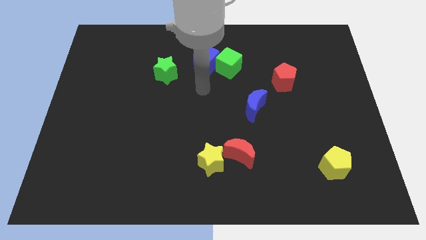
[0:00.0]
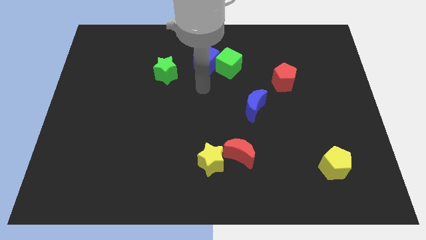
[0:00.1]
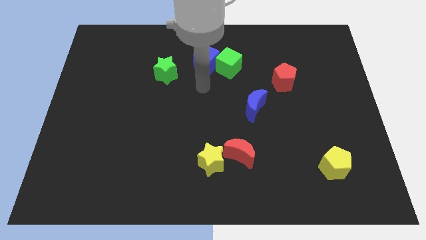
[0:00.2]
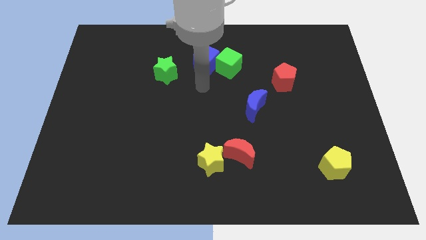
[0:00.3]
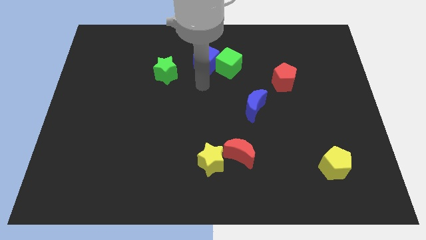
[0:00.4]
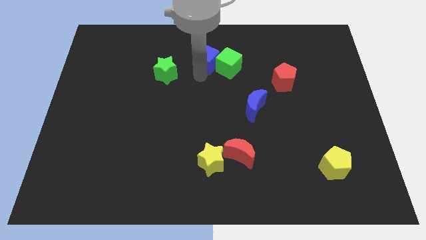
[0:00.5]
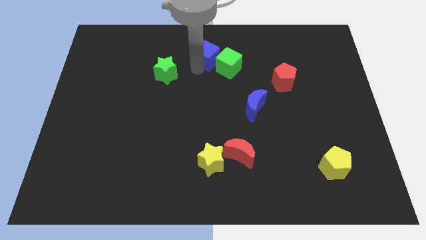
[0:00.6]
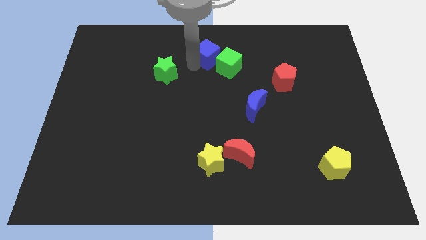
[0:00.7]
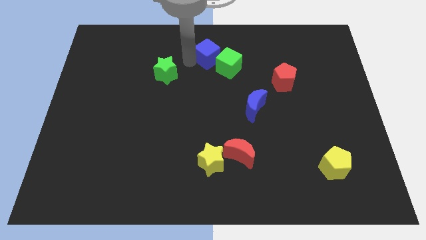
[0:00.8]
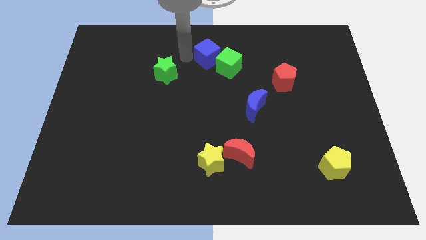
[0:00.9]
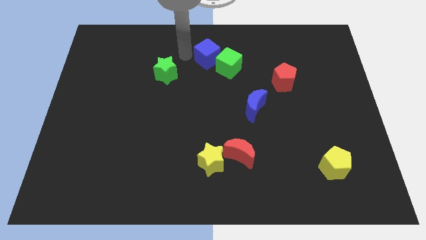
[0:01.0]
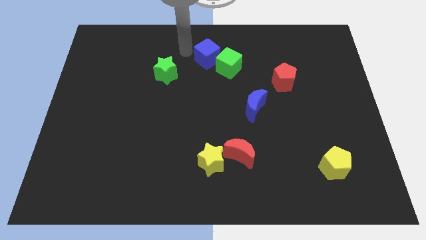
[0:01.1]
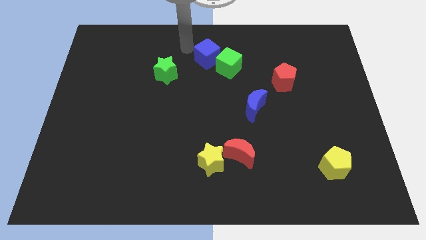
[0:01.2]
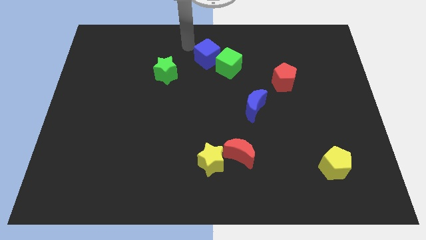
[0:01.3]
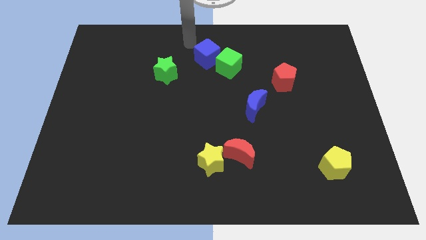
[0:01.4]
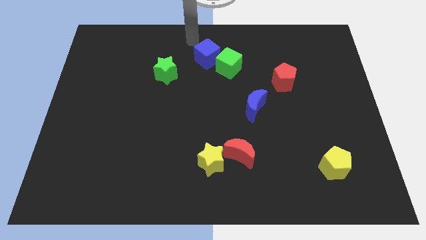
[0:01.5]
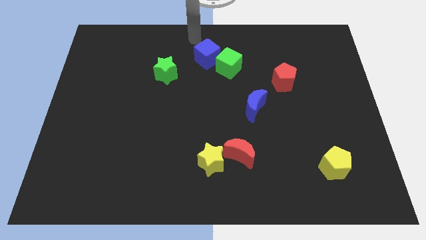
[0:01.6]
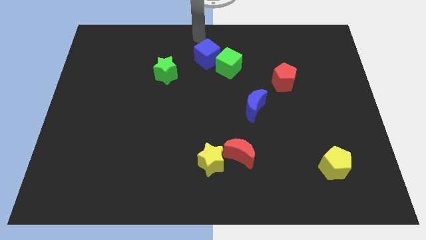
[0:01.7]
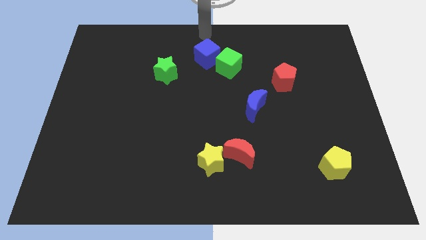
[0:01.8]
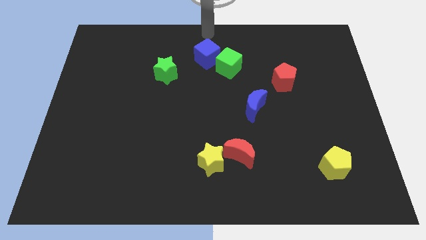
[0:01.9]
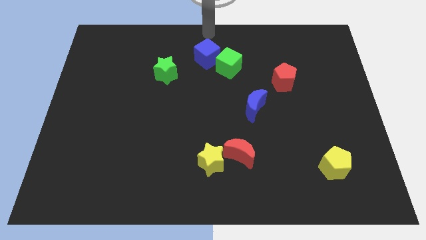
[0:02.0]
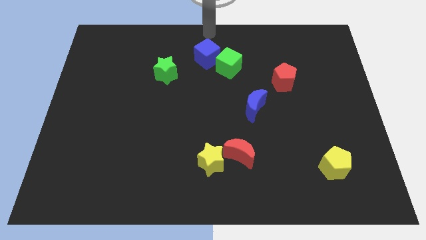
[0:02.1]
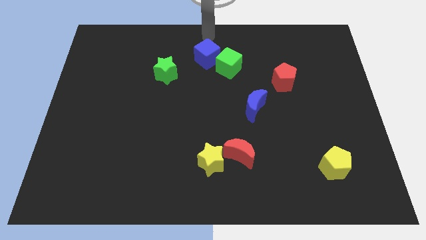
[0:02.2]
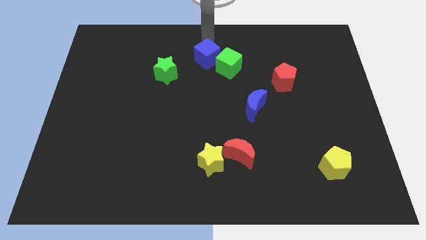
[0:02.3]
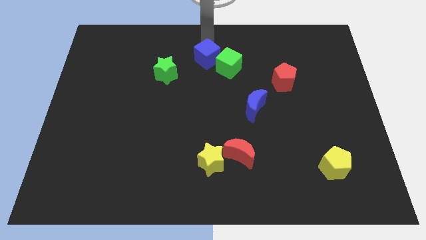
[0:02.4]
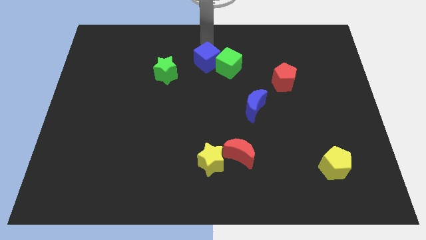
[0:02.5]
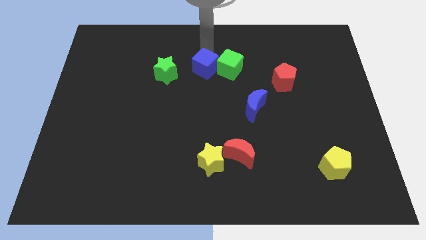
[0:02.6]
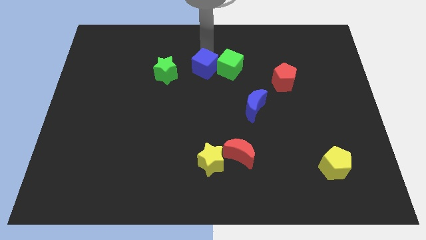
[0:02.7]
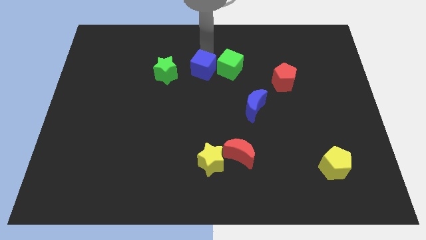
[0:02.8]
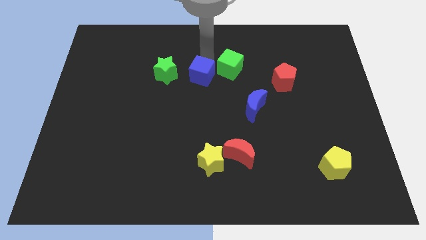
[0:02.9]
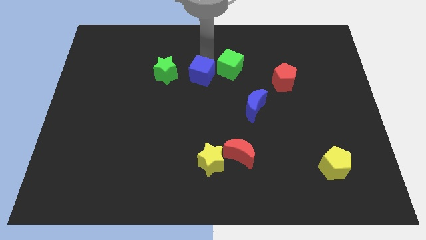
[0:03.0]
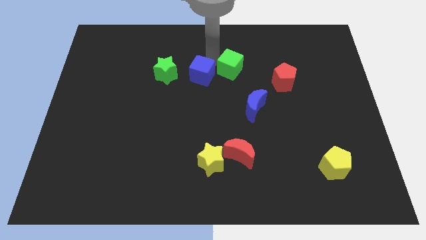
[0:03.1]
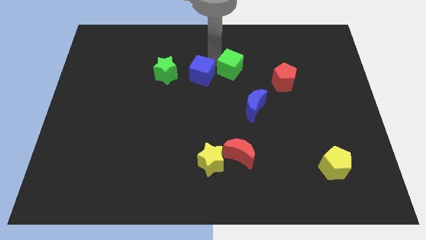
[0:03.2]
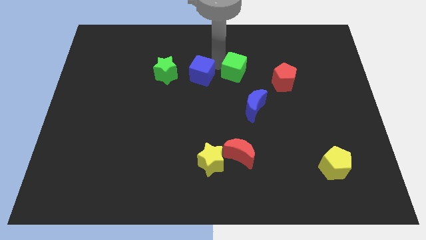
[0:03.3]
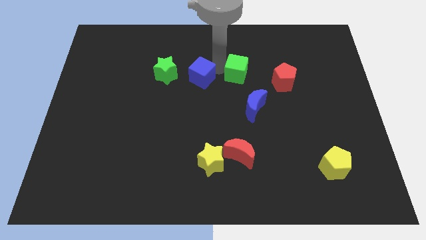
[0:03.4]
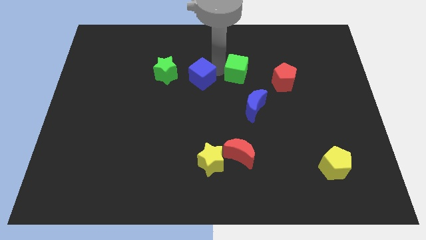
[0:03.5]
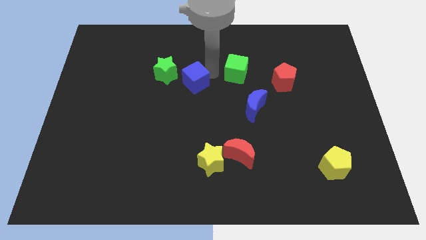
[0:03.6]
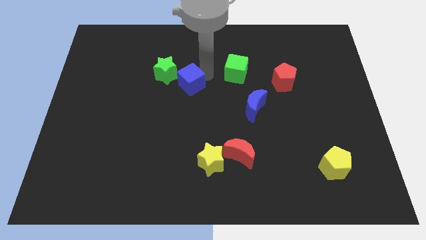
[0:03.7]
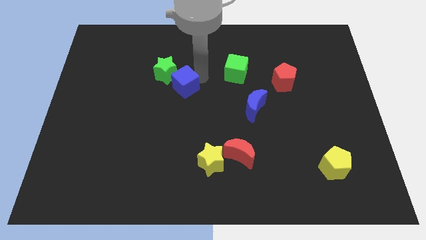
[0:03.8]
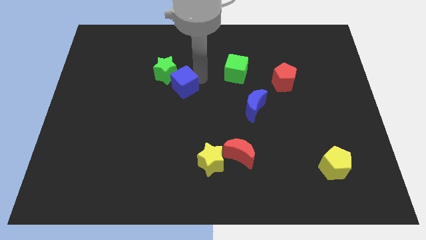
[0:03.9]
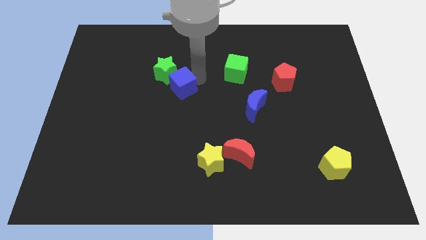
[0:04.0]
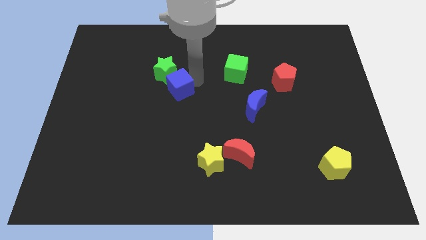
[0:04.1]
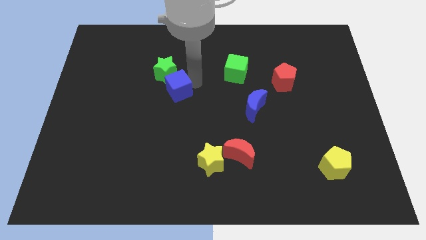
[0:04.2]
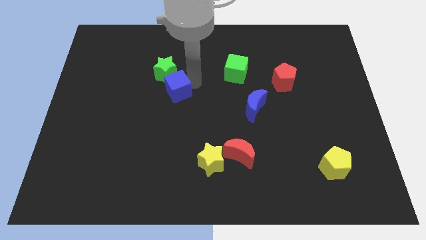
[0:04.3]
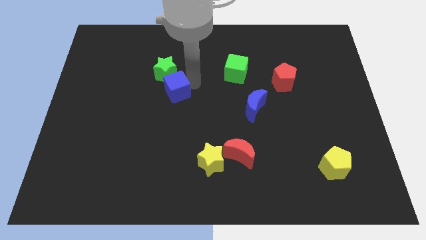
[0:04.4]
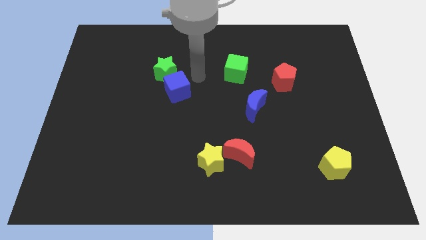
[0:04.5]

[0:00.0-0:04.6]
place blue cube to the bottom right of green star

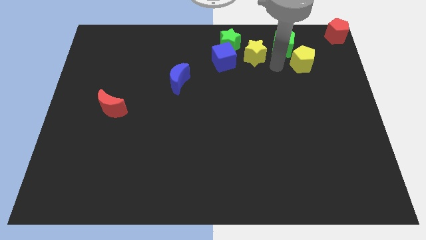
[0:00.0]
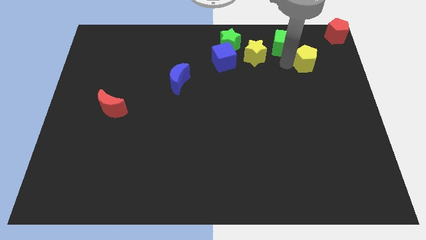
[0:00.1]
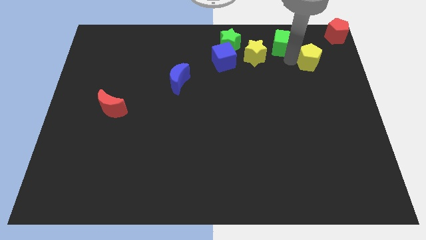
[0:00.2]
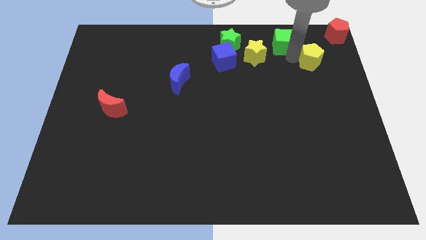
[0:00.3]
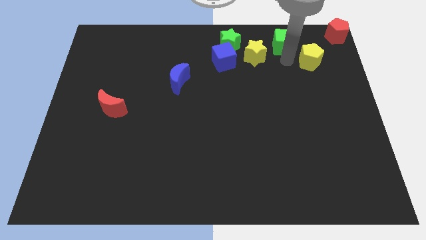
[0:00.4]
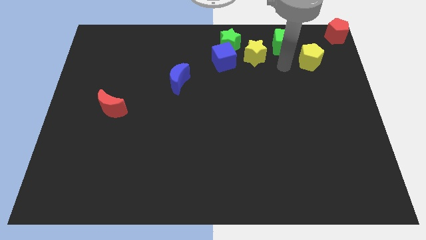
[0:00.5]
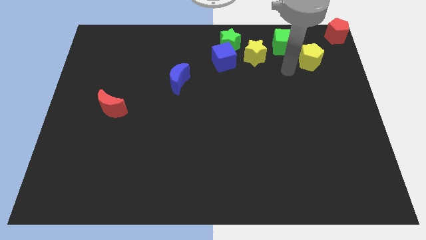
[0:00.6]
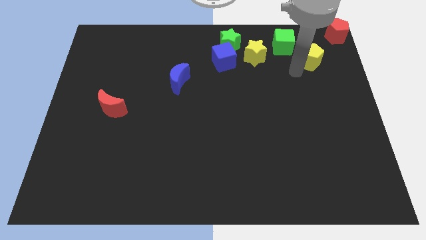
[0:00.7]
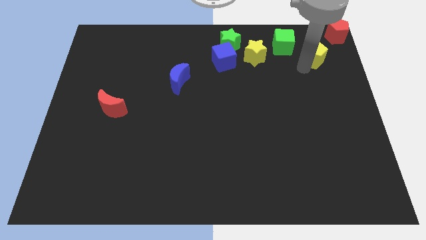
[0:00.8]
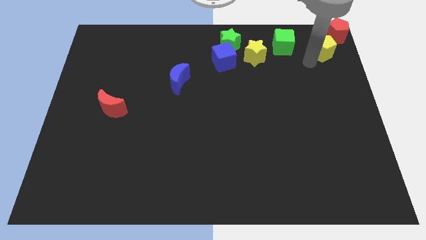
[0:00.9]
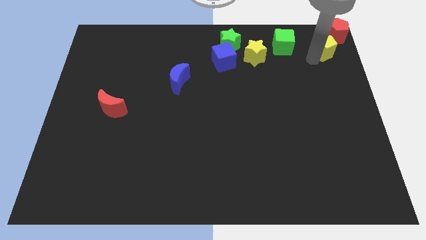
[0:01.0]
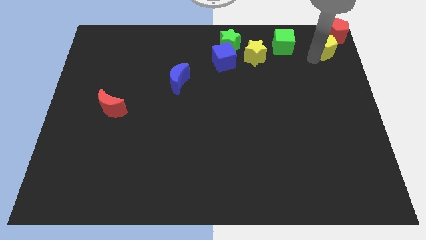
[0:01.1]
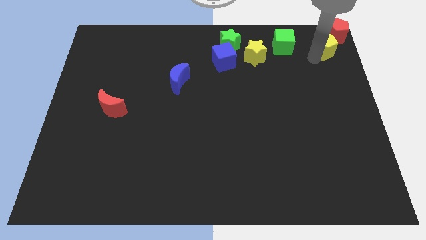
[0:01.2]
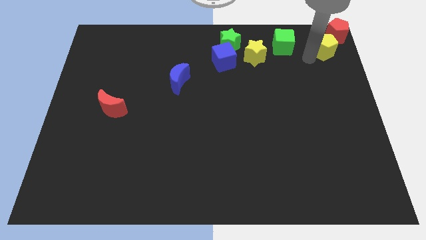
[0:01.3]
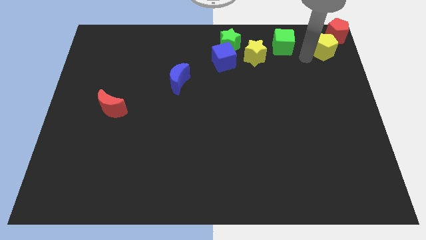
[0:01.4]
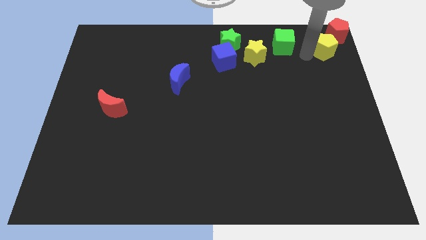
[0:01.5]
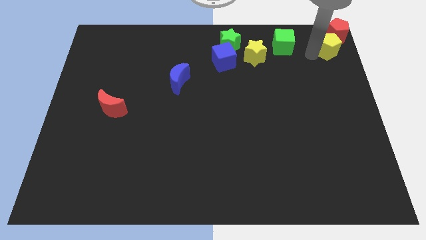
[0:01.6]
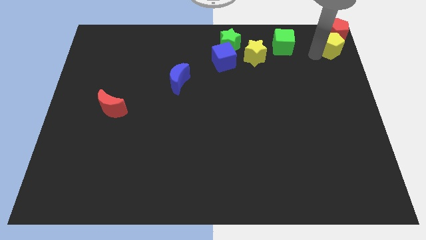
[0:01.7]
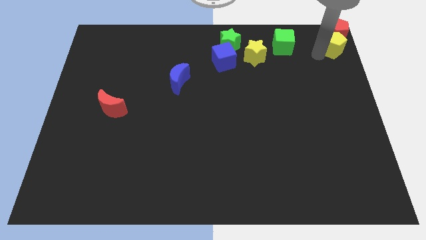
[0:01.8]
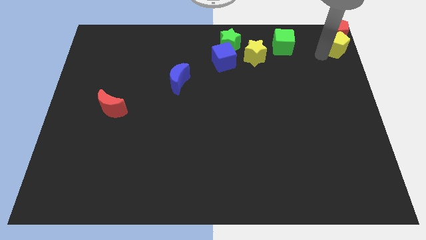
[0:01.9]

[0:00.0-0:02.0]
move yellow pentagon to the bottom of red pentagon

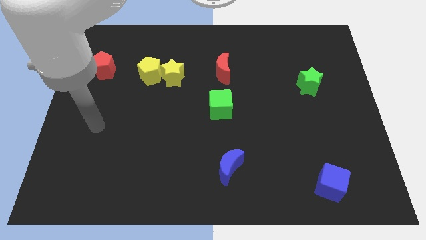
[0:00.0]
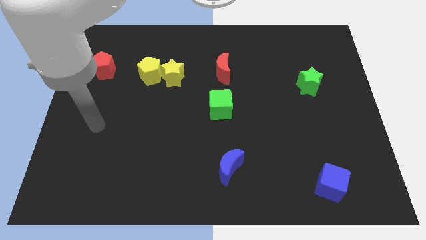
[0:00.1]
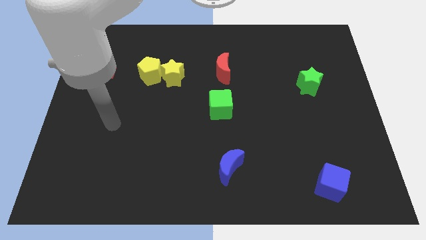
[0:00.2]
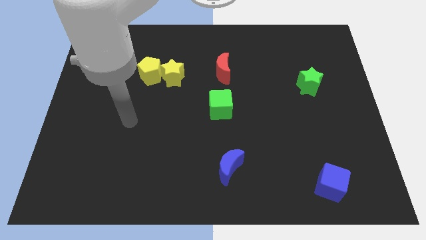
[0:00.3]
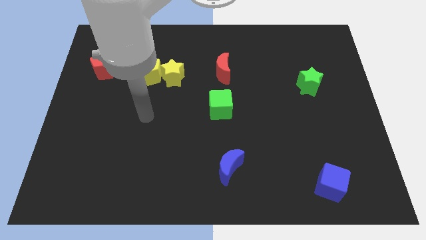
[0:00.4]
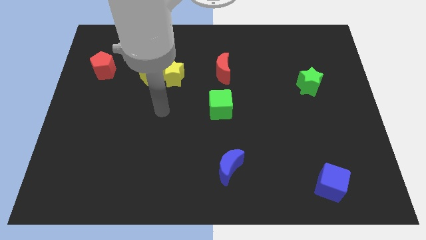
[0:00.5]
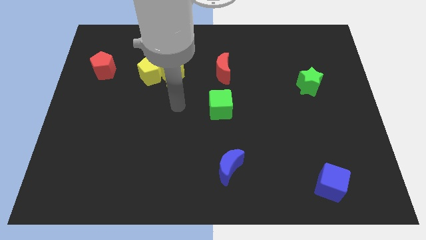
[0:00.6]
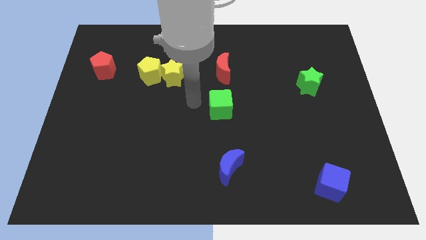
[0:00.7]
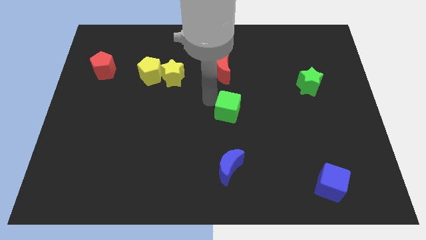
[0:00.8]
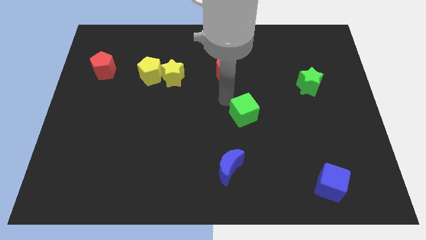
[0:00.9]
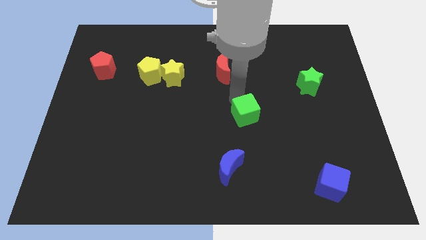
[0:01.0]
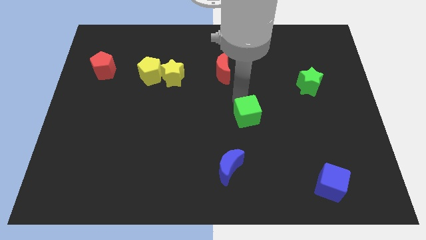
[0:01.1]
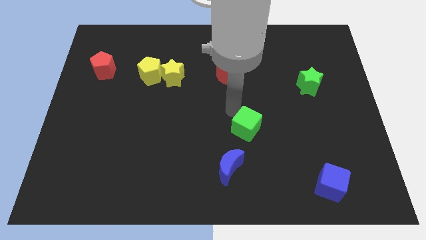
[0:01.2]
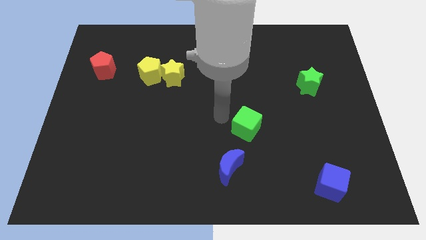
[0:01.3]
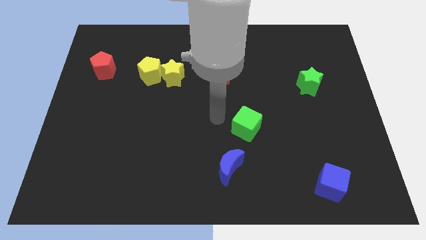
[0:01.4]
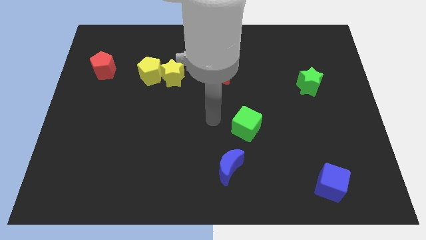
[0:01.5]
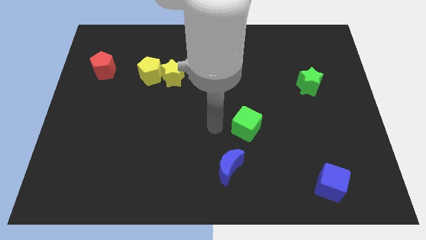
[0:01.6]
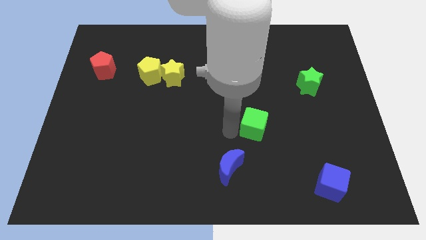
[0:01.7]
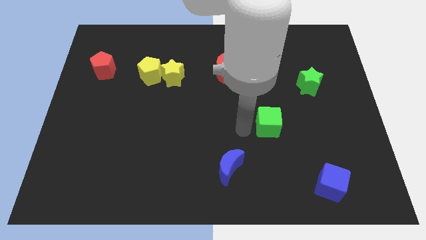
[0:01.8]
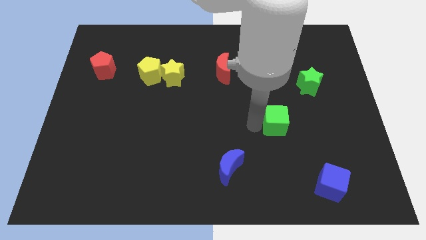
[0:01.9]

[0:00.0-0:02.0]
move green cube towards the green star

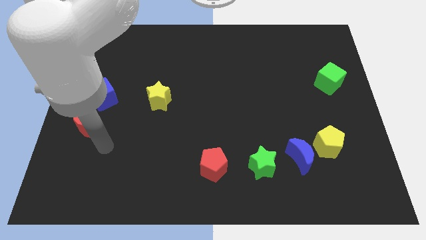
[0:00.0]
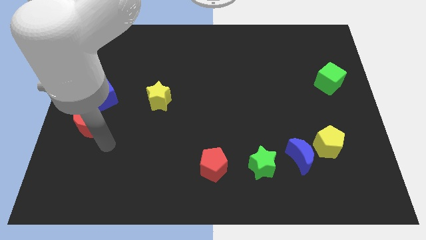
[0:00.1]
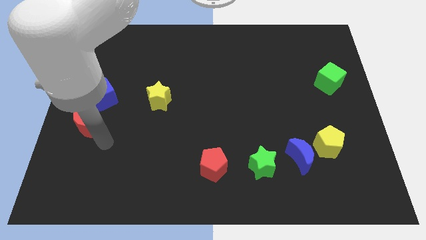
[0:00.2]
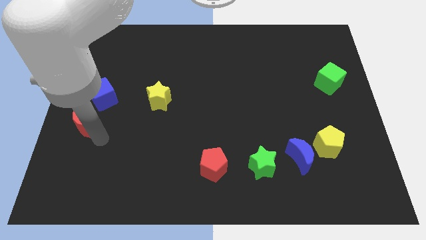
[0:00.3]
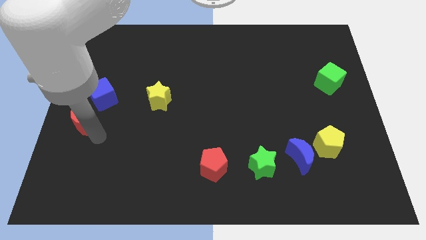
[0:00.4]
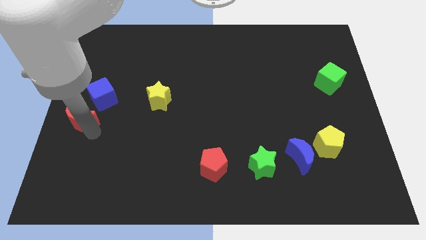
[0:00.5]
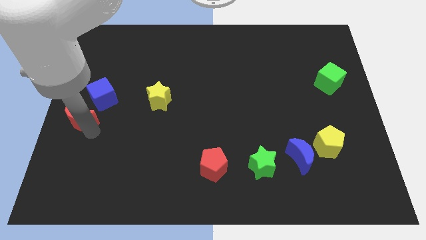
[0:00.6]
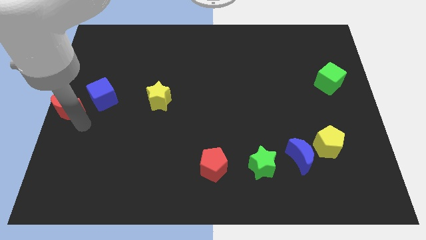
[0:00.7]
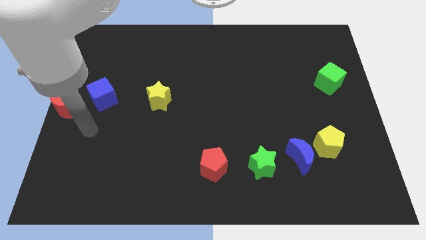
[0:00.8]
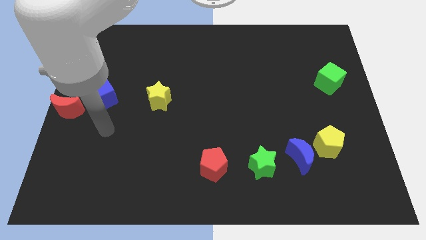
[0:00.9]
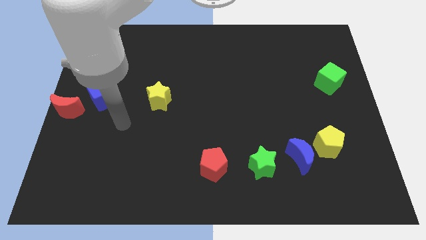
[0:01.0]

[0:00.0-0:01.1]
slide red moon to the center left
